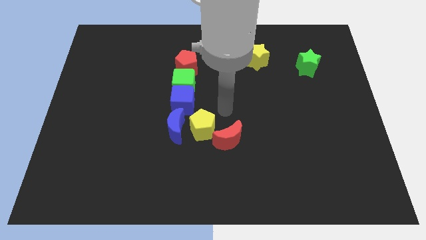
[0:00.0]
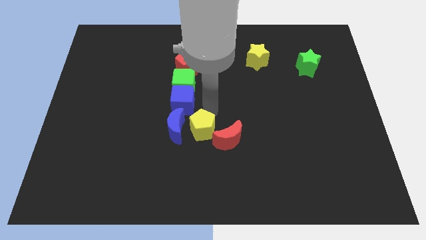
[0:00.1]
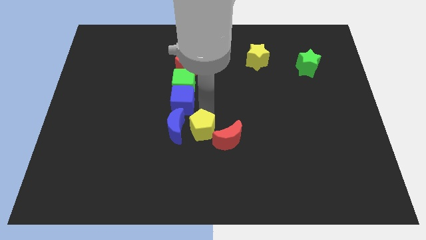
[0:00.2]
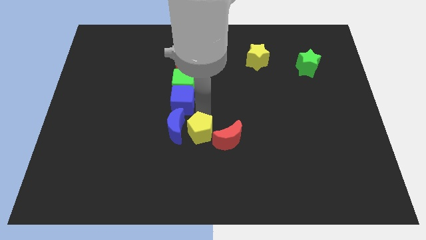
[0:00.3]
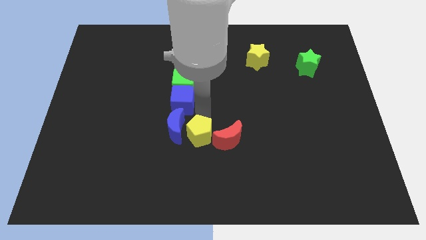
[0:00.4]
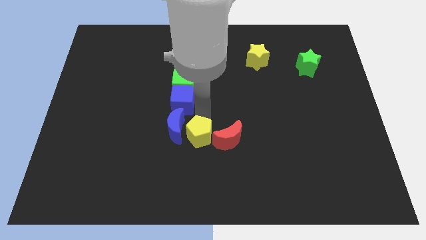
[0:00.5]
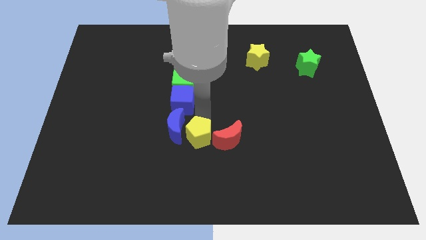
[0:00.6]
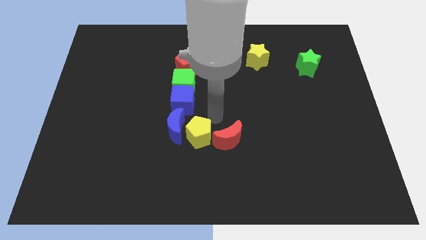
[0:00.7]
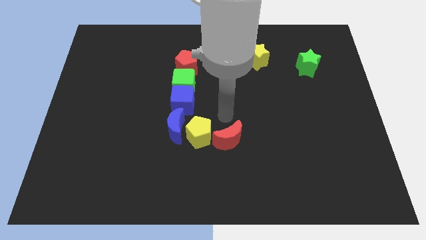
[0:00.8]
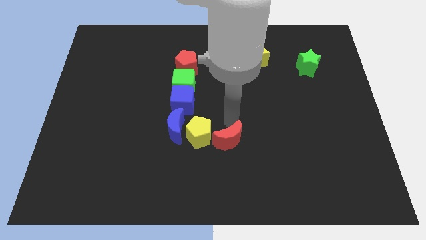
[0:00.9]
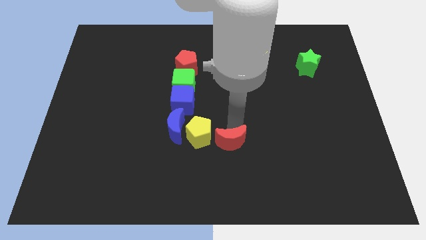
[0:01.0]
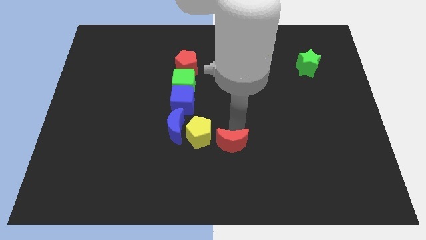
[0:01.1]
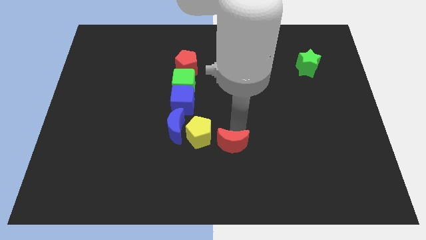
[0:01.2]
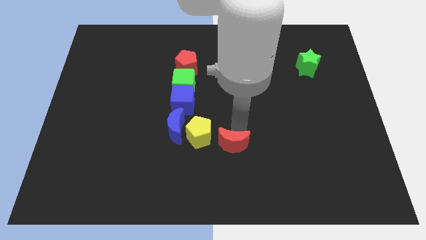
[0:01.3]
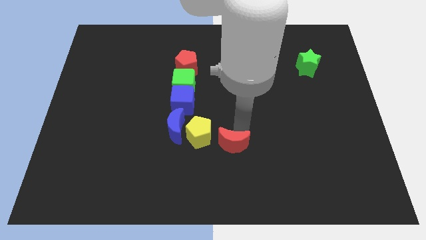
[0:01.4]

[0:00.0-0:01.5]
move tha yellow pentagon slightly downwards

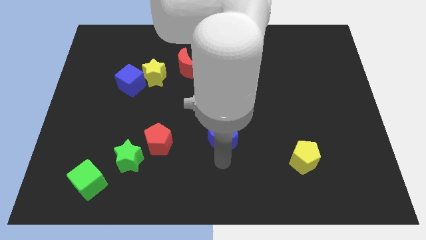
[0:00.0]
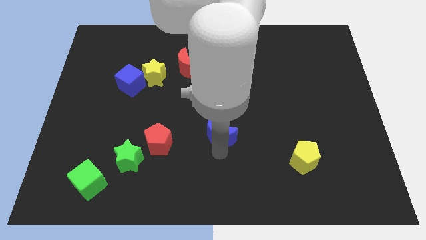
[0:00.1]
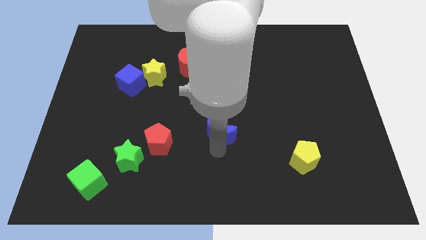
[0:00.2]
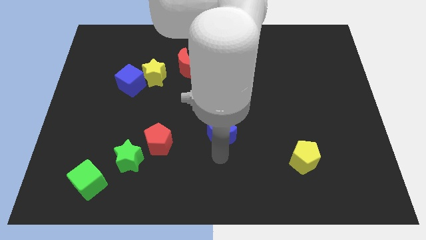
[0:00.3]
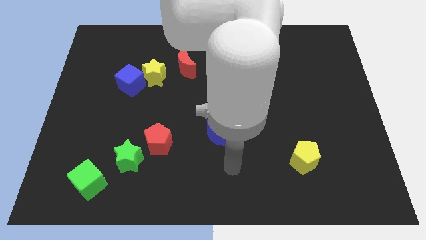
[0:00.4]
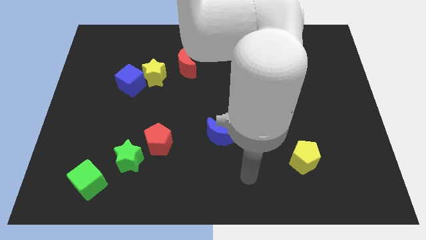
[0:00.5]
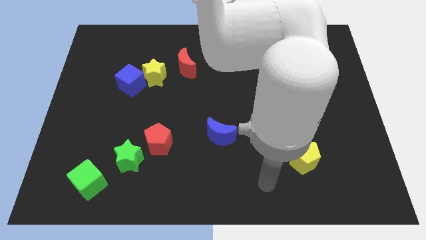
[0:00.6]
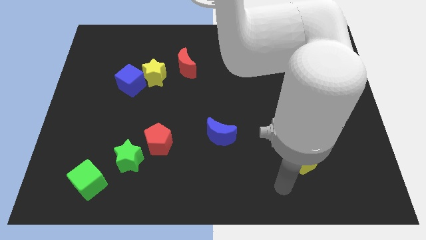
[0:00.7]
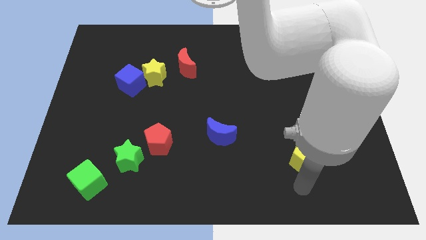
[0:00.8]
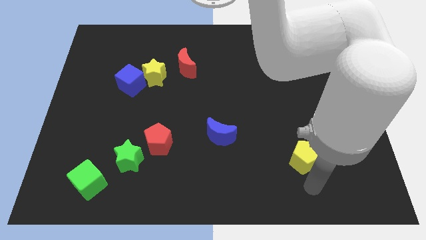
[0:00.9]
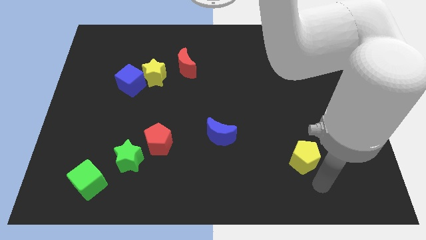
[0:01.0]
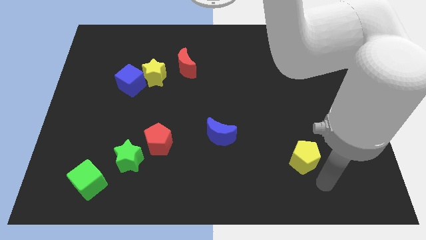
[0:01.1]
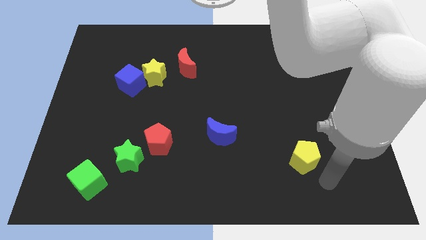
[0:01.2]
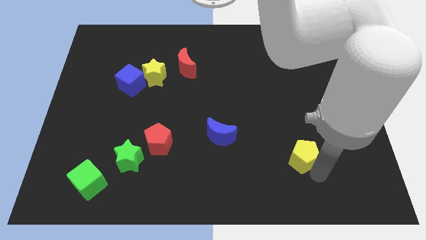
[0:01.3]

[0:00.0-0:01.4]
move the blue crescent towards center

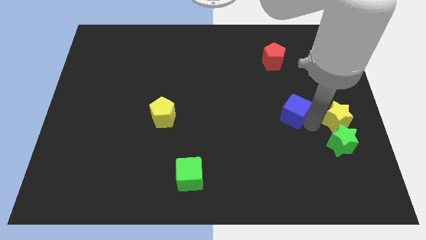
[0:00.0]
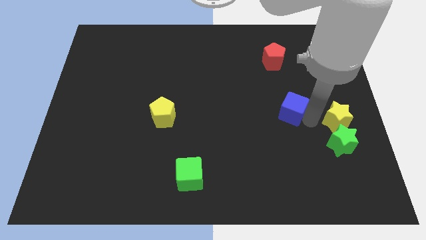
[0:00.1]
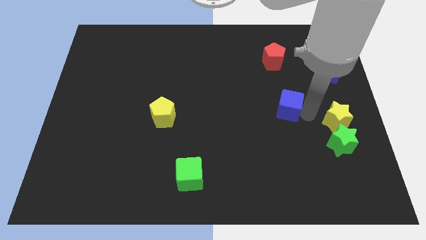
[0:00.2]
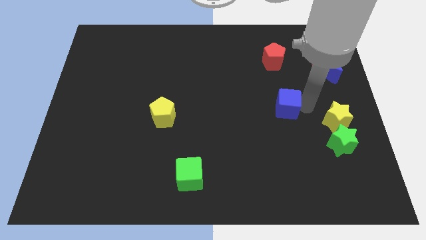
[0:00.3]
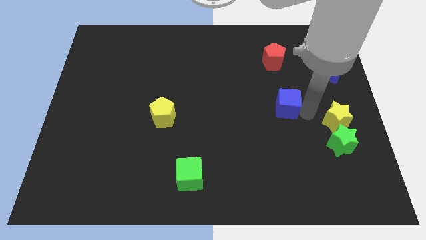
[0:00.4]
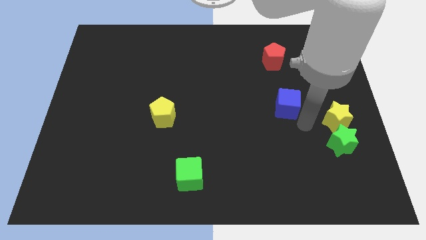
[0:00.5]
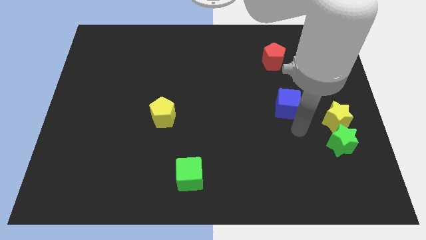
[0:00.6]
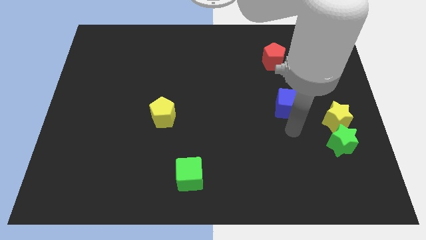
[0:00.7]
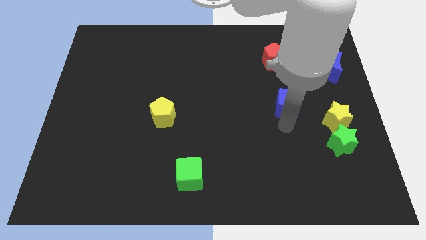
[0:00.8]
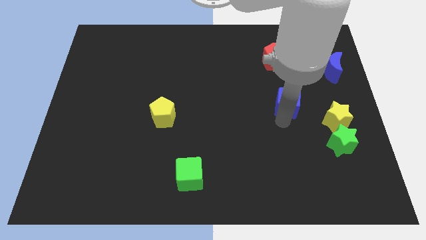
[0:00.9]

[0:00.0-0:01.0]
push the blue moon towards upward

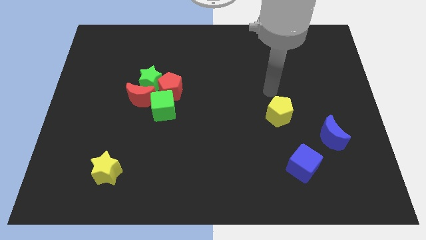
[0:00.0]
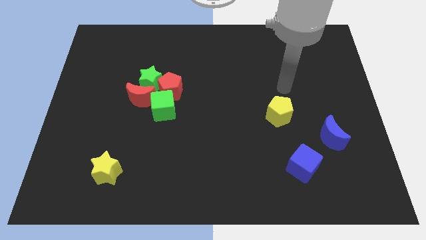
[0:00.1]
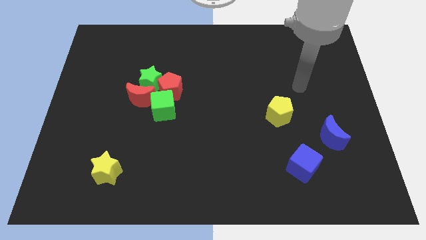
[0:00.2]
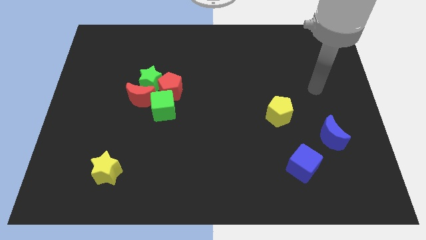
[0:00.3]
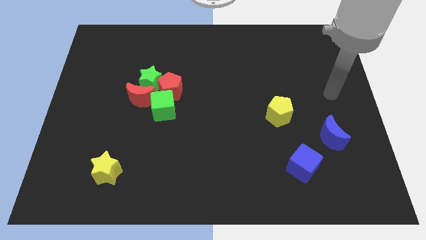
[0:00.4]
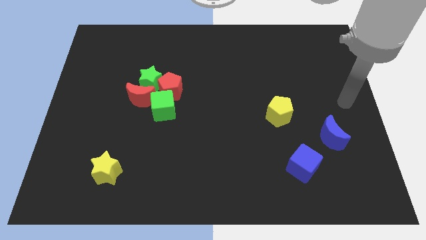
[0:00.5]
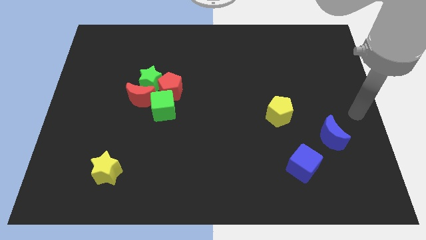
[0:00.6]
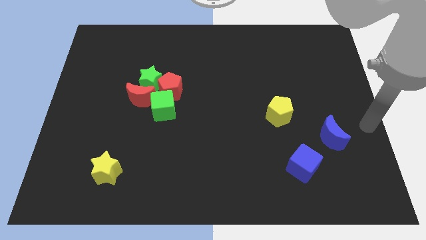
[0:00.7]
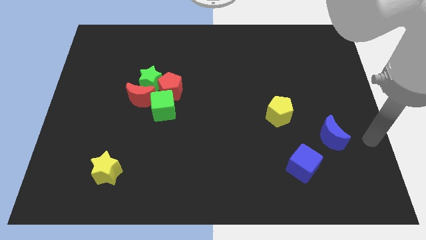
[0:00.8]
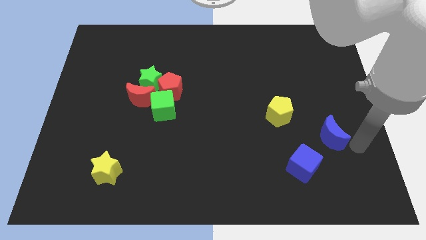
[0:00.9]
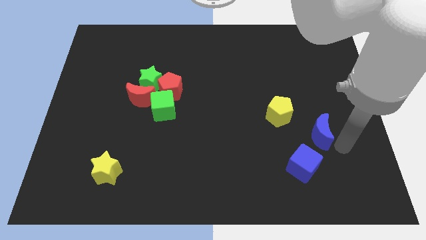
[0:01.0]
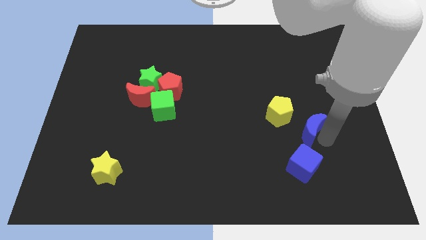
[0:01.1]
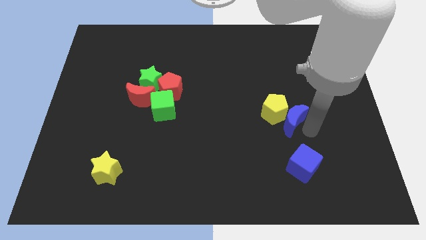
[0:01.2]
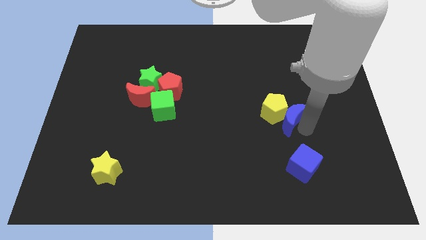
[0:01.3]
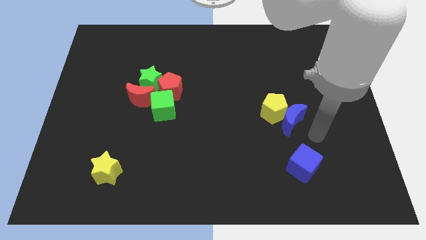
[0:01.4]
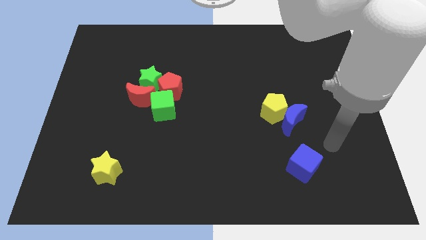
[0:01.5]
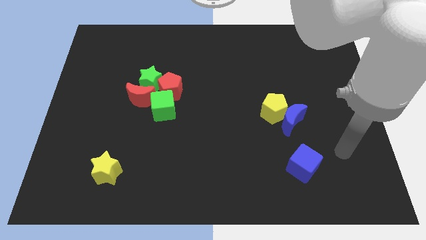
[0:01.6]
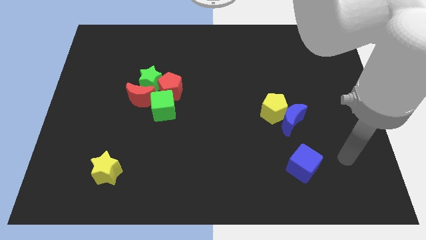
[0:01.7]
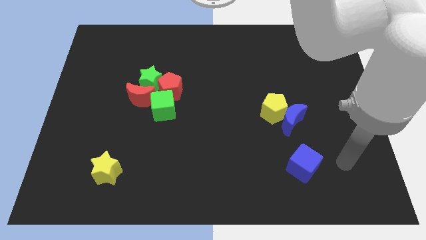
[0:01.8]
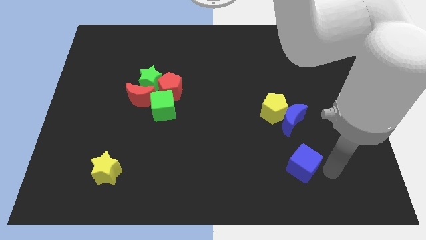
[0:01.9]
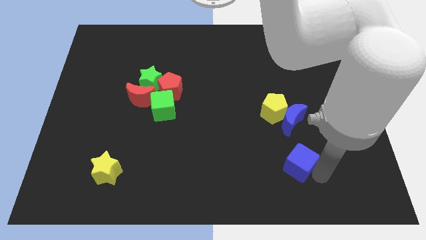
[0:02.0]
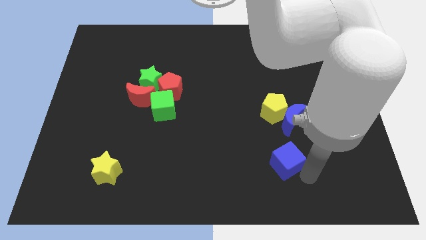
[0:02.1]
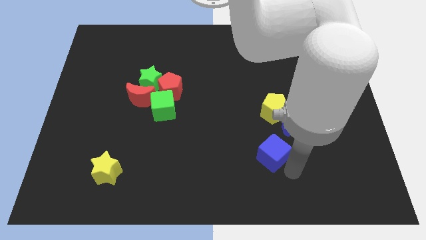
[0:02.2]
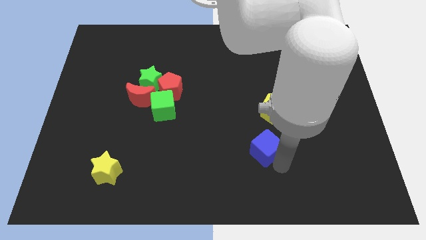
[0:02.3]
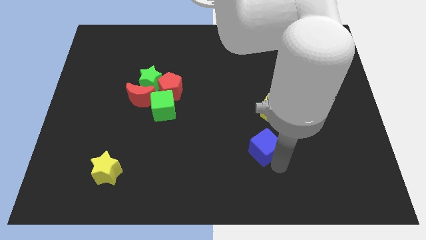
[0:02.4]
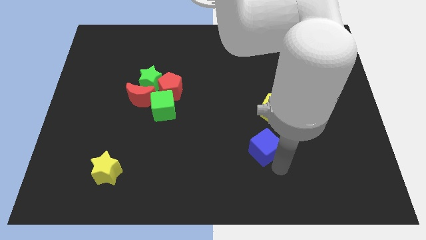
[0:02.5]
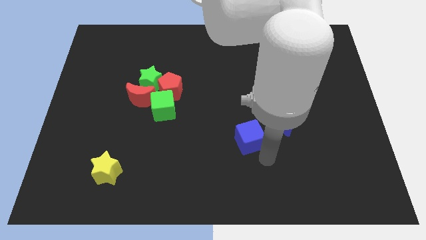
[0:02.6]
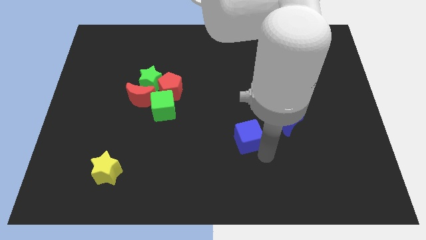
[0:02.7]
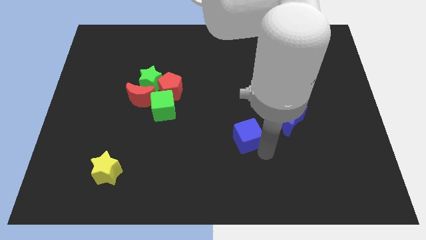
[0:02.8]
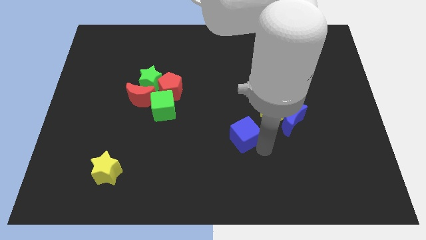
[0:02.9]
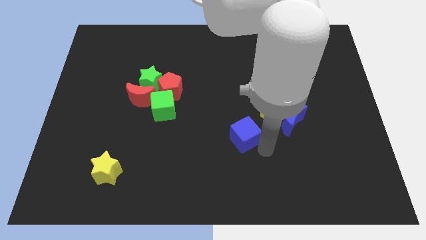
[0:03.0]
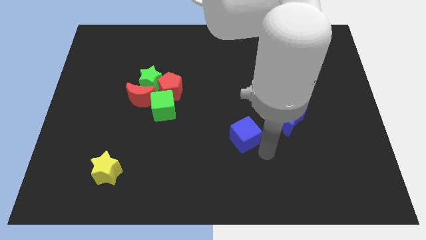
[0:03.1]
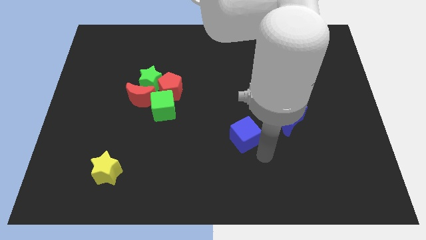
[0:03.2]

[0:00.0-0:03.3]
push the yellow pentagon using blue crescent while placing the blue cube left to the blue crescent

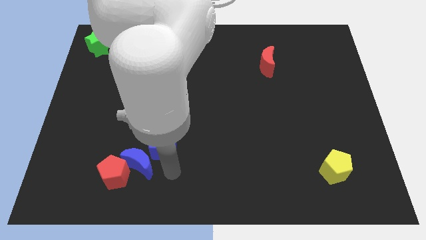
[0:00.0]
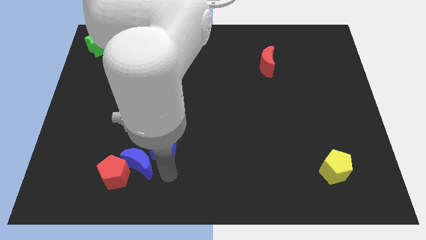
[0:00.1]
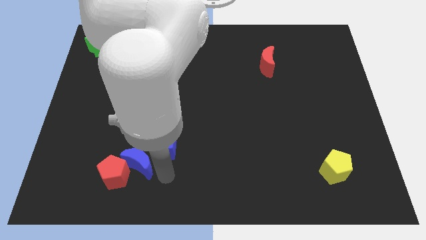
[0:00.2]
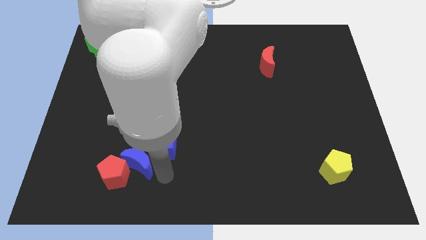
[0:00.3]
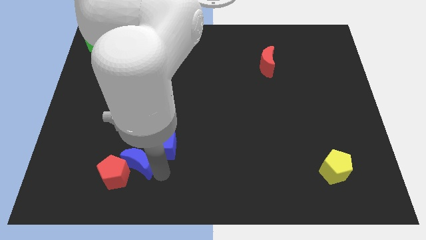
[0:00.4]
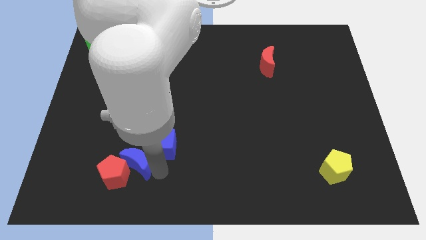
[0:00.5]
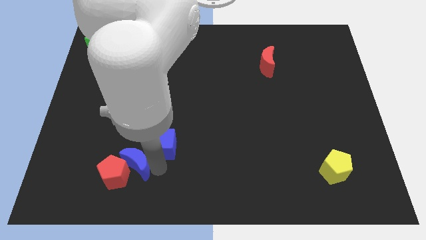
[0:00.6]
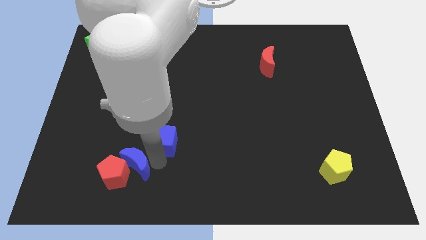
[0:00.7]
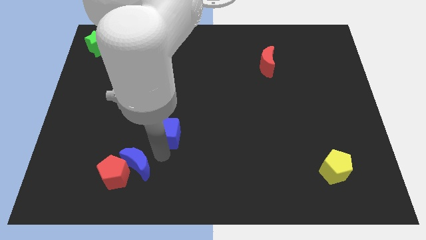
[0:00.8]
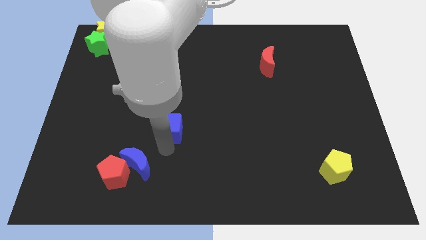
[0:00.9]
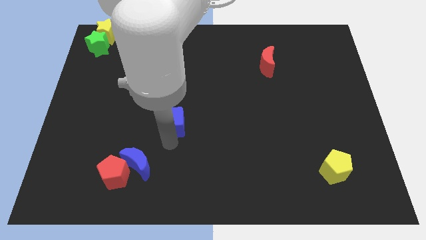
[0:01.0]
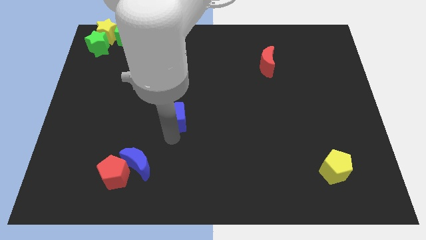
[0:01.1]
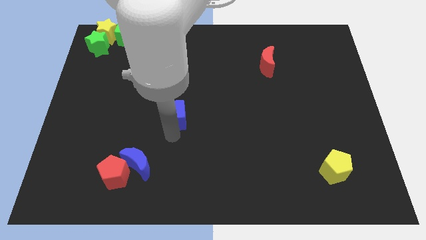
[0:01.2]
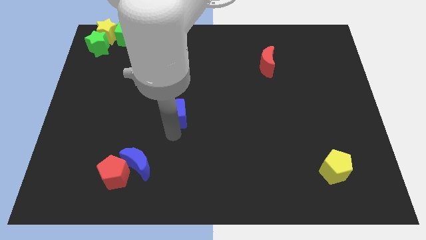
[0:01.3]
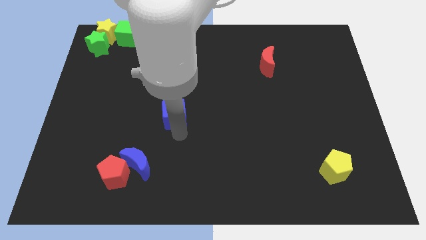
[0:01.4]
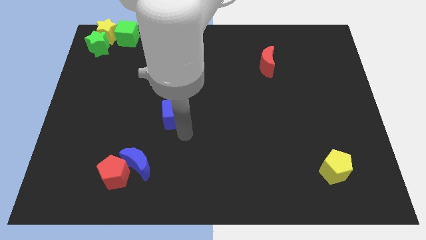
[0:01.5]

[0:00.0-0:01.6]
push the blue cube towards the center of the board

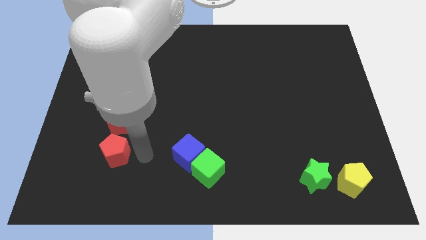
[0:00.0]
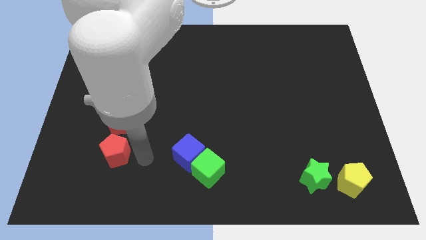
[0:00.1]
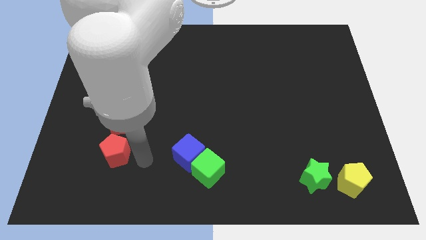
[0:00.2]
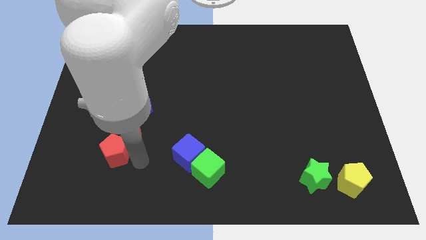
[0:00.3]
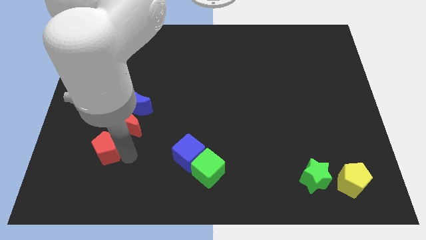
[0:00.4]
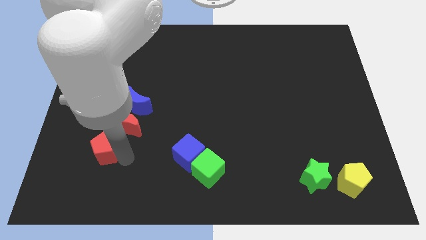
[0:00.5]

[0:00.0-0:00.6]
touch the bottom of red pentagon
